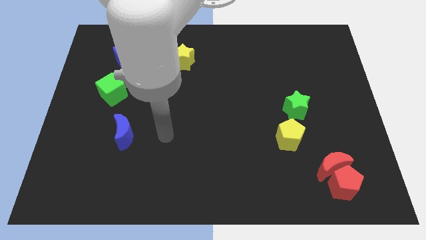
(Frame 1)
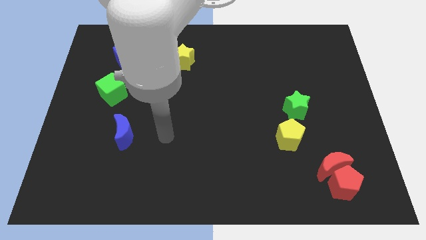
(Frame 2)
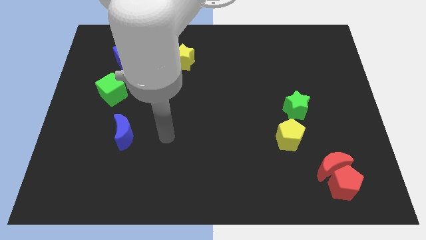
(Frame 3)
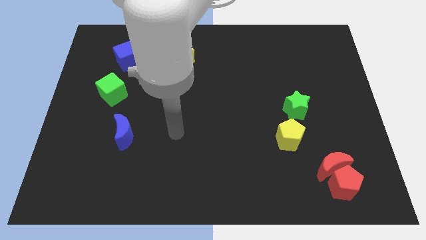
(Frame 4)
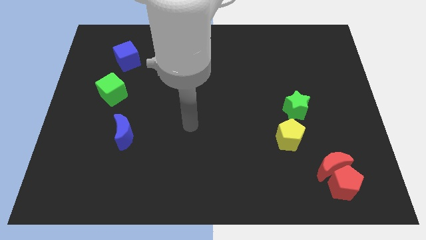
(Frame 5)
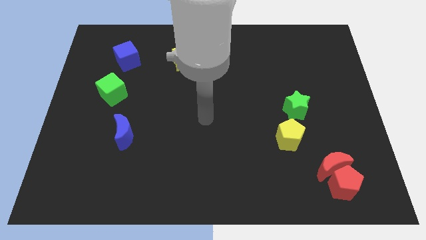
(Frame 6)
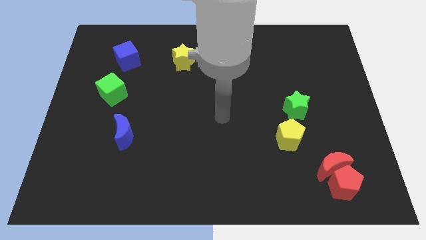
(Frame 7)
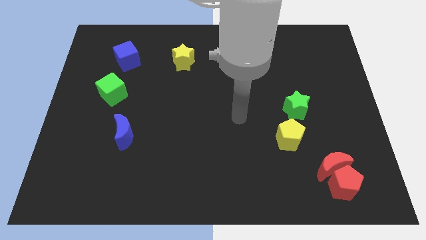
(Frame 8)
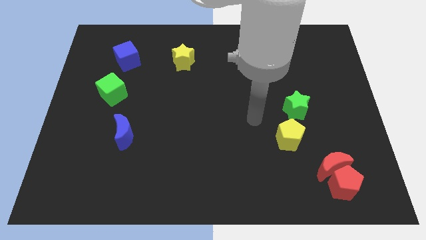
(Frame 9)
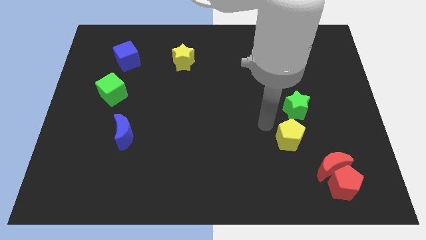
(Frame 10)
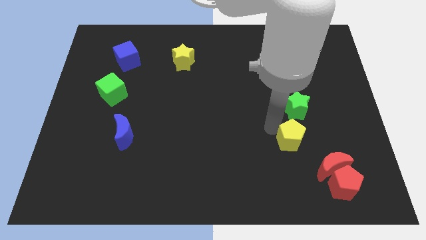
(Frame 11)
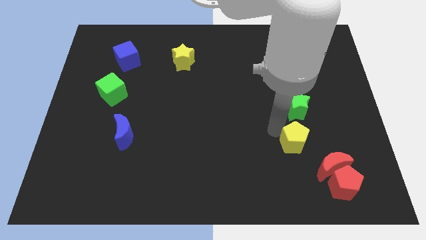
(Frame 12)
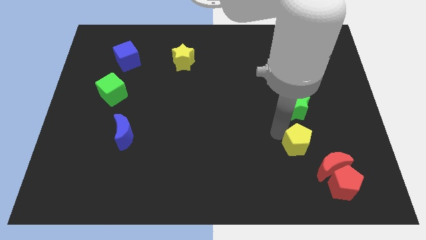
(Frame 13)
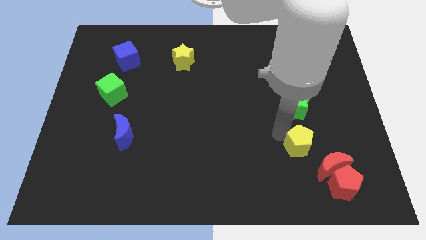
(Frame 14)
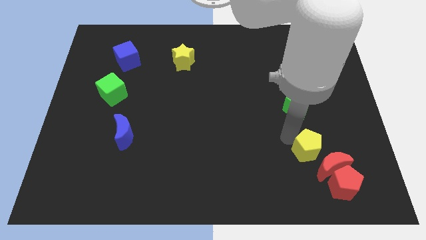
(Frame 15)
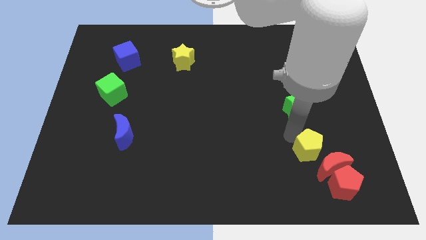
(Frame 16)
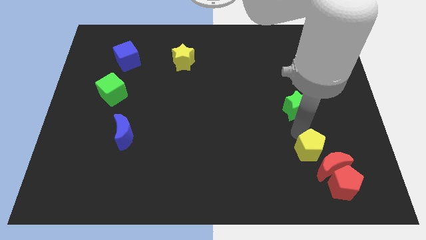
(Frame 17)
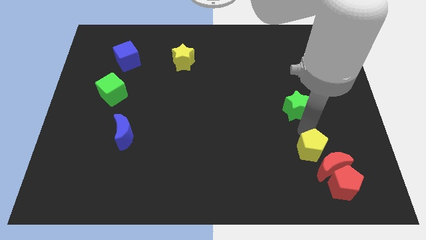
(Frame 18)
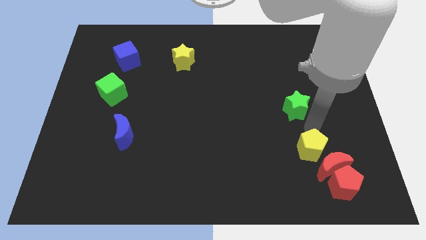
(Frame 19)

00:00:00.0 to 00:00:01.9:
slightly move the yellow pentagon to the right

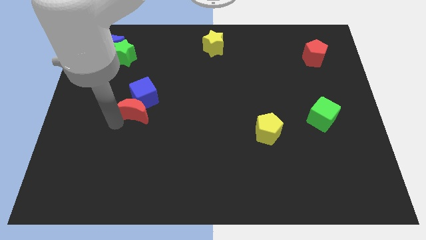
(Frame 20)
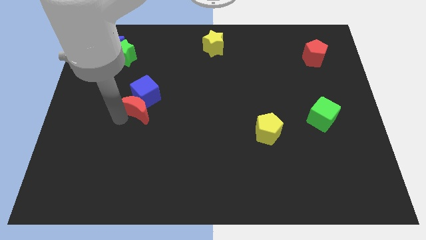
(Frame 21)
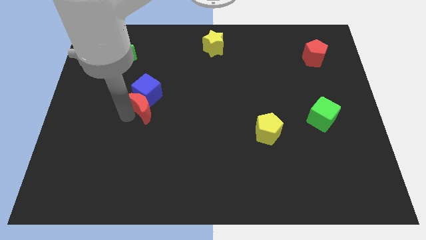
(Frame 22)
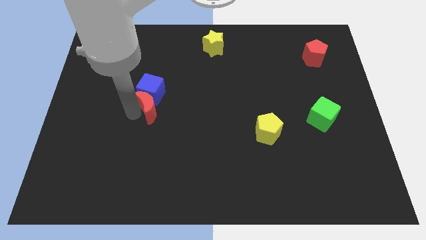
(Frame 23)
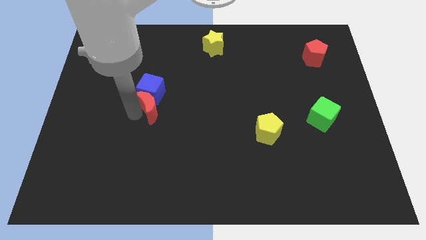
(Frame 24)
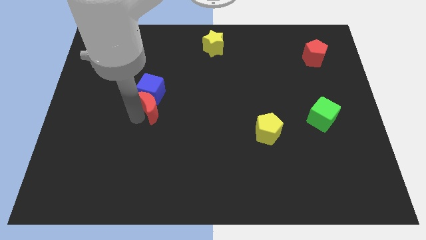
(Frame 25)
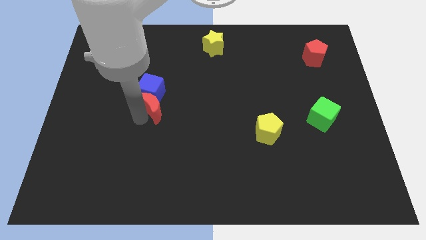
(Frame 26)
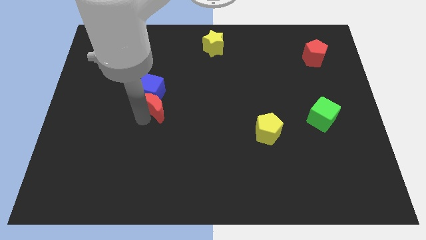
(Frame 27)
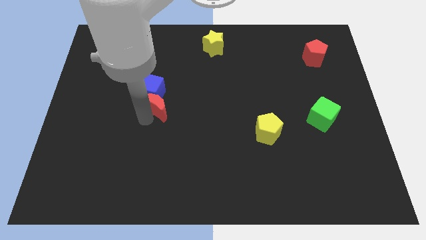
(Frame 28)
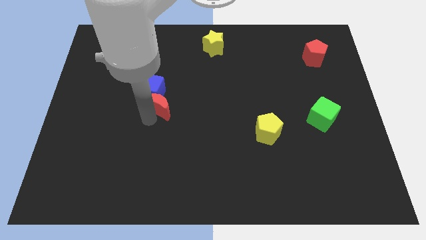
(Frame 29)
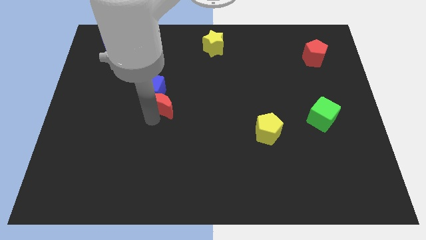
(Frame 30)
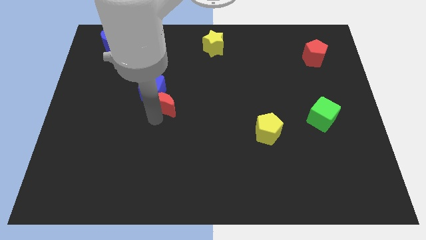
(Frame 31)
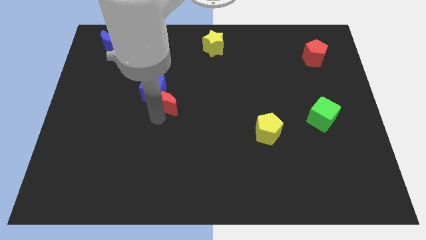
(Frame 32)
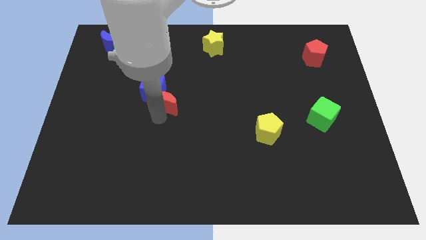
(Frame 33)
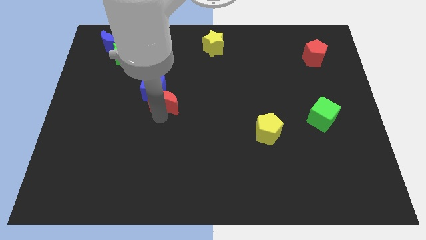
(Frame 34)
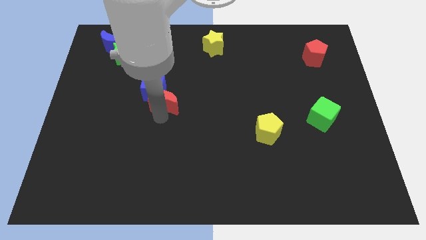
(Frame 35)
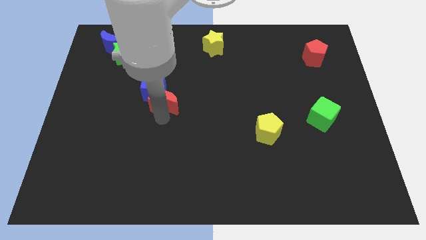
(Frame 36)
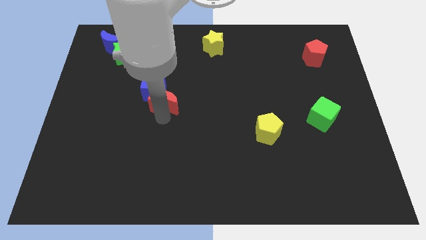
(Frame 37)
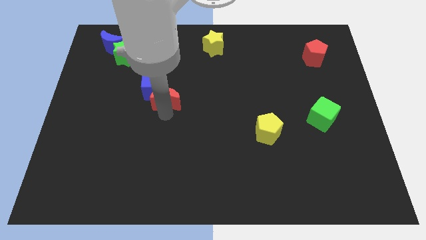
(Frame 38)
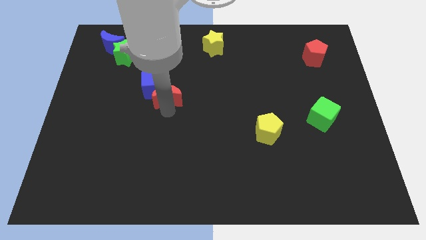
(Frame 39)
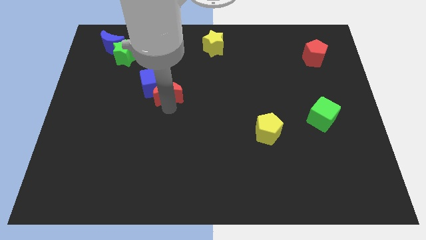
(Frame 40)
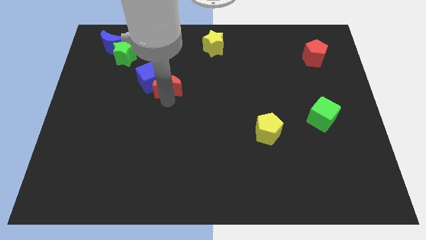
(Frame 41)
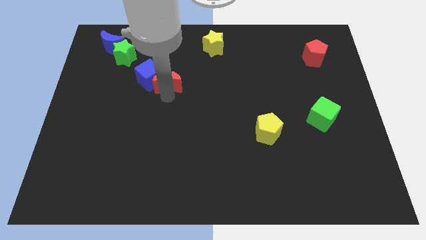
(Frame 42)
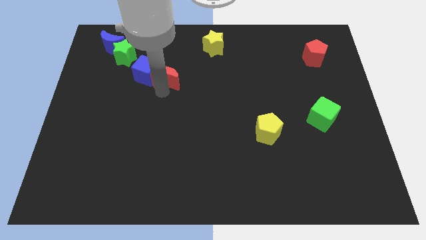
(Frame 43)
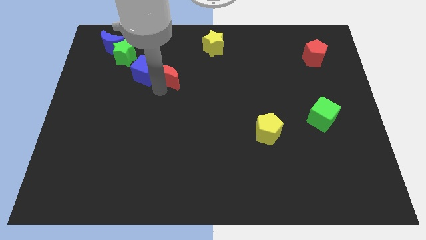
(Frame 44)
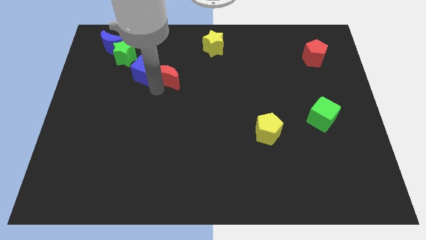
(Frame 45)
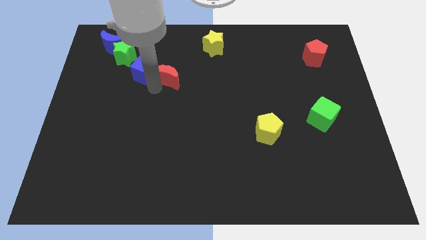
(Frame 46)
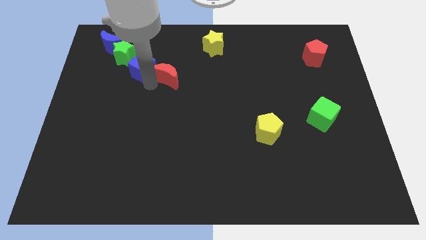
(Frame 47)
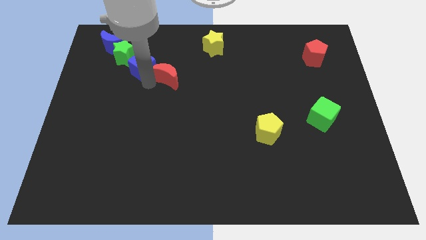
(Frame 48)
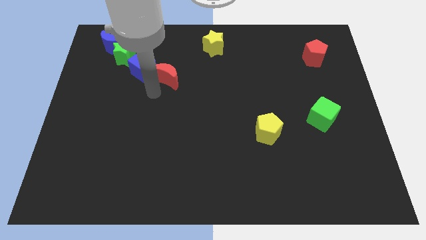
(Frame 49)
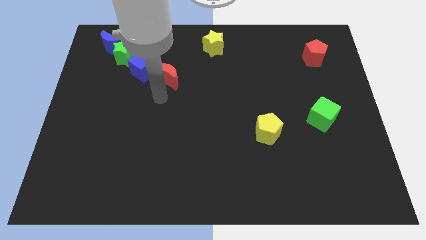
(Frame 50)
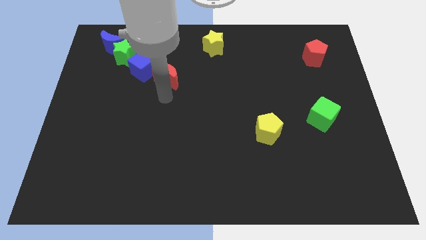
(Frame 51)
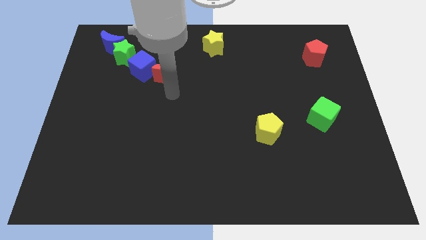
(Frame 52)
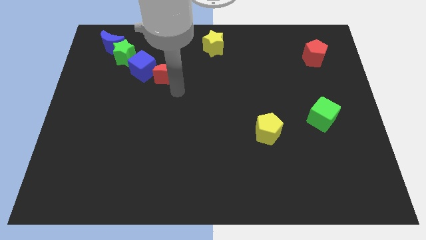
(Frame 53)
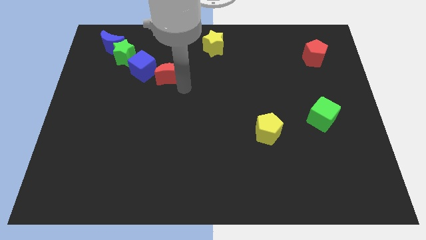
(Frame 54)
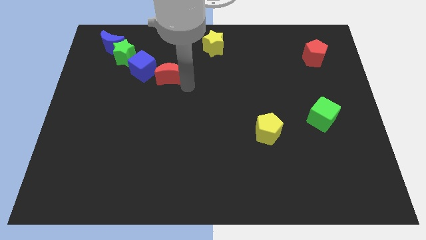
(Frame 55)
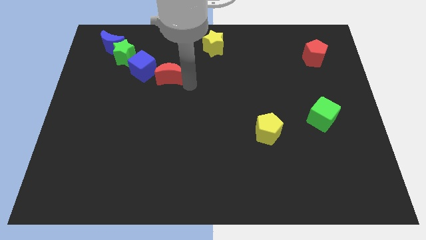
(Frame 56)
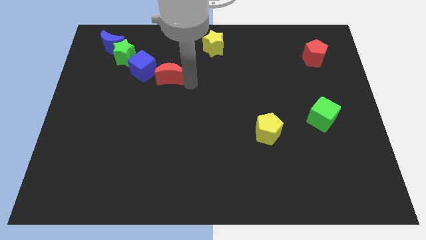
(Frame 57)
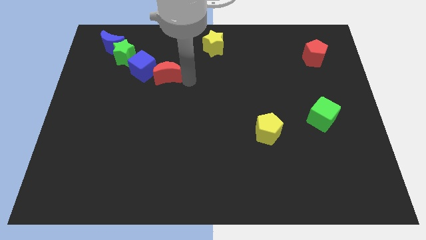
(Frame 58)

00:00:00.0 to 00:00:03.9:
place red crescent to the right of blue cube

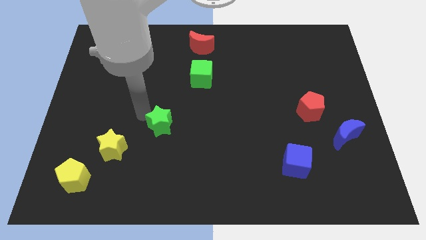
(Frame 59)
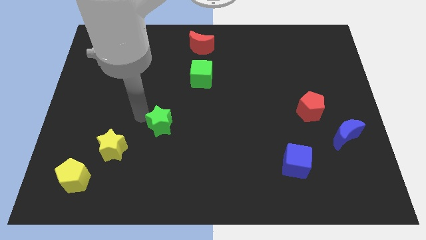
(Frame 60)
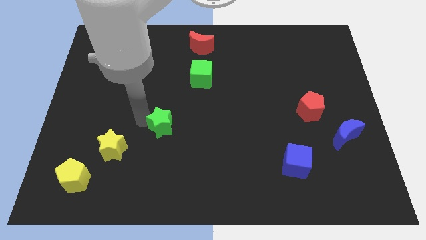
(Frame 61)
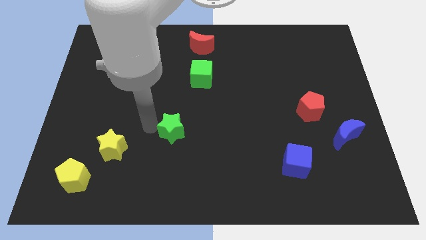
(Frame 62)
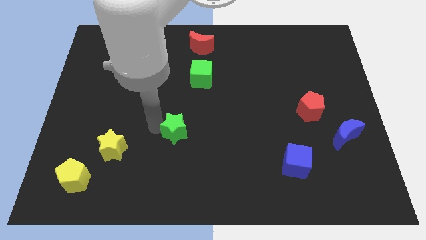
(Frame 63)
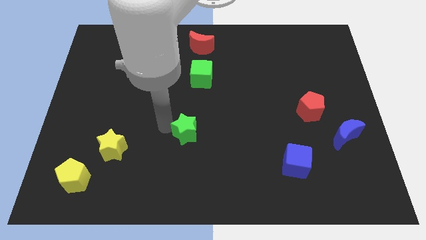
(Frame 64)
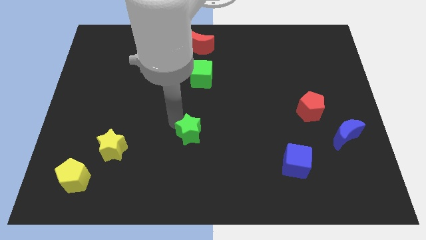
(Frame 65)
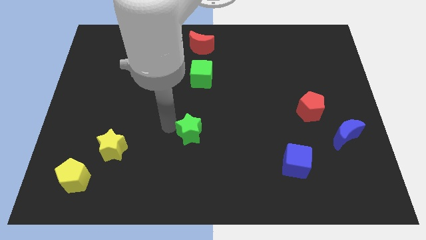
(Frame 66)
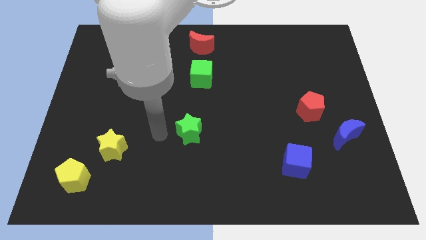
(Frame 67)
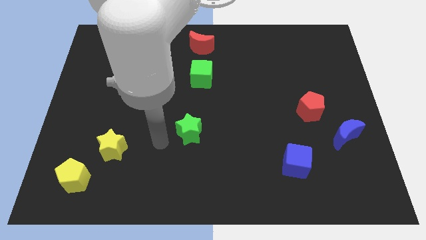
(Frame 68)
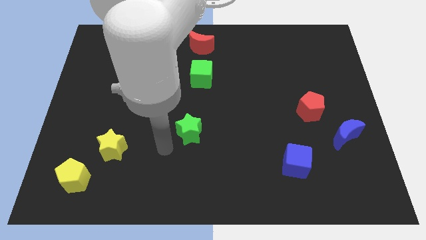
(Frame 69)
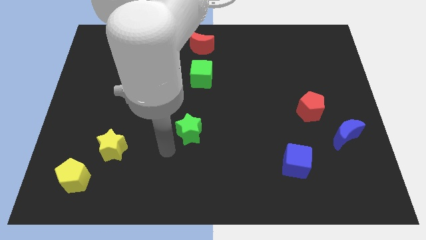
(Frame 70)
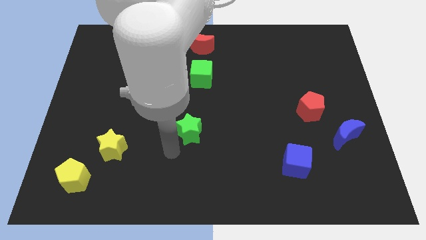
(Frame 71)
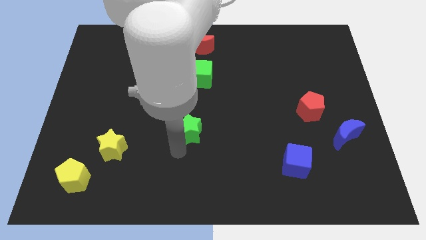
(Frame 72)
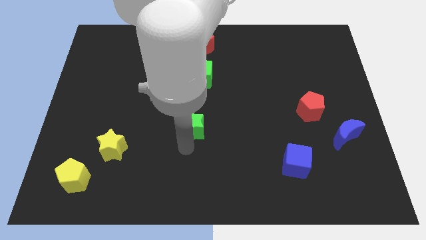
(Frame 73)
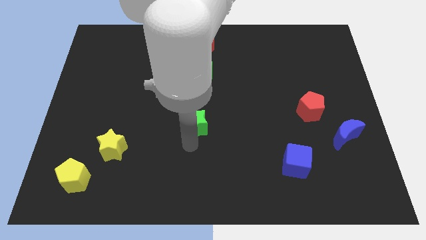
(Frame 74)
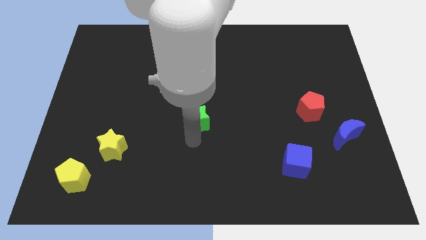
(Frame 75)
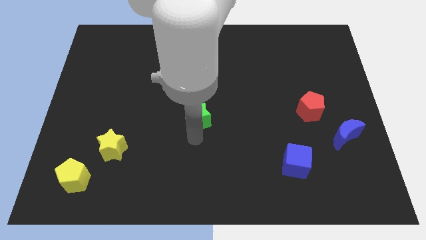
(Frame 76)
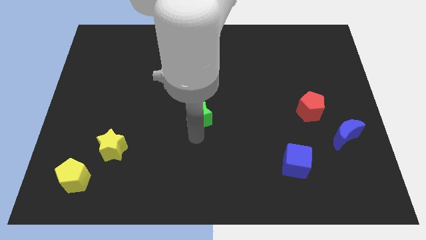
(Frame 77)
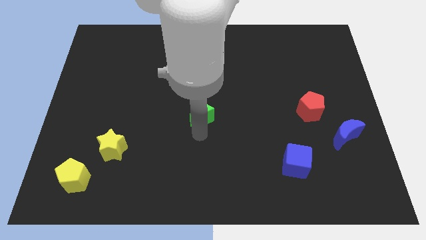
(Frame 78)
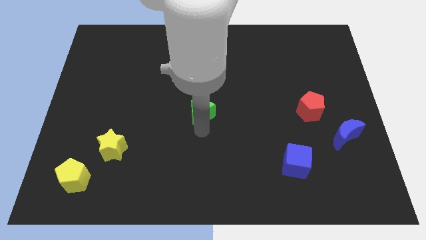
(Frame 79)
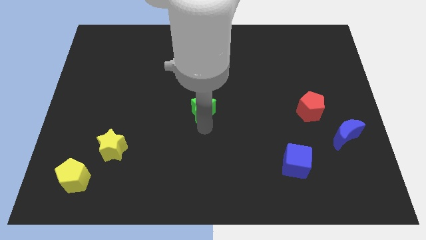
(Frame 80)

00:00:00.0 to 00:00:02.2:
push the green star towards the green cube

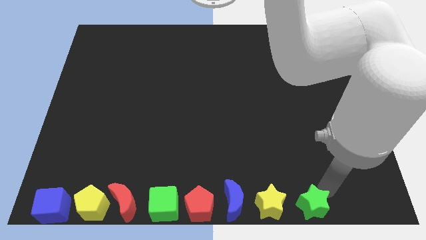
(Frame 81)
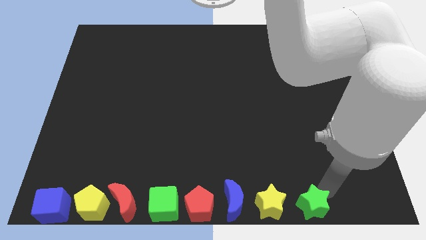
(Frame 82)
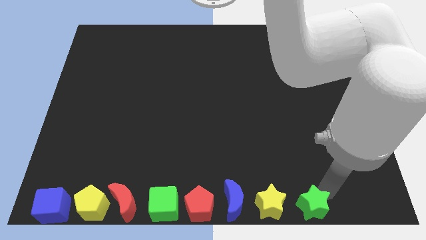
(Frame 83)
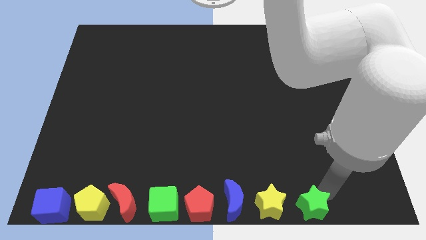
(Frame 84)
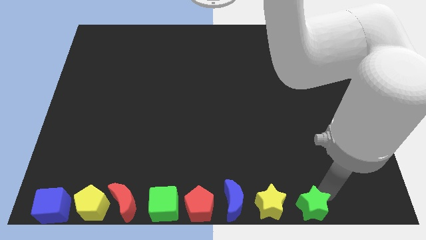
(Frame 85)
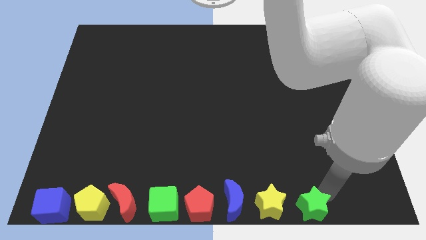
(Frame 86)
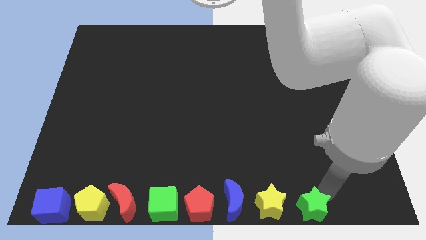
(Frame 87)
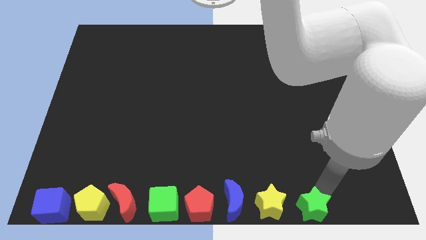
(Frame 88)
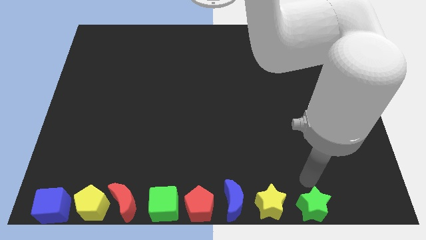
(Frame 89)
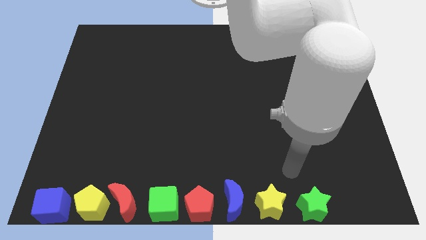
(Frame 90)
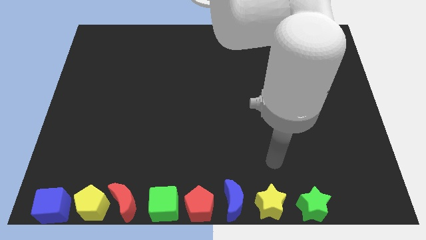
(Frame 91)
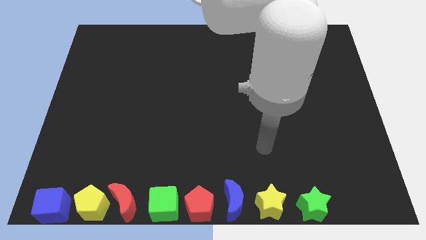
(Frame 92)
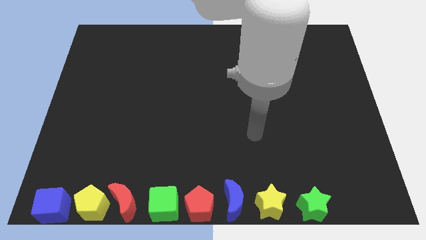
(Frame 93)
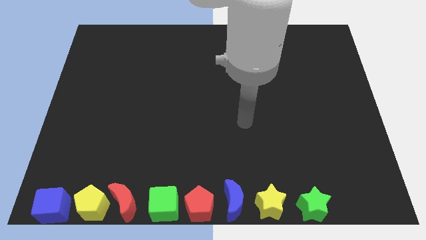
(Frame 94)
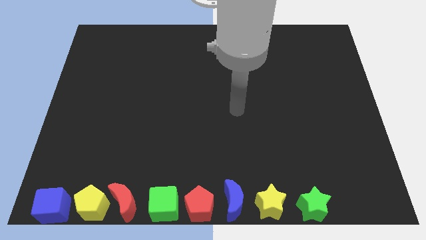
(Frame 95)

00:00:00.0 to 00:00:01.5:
move the arm away from the green star
